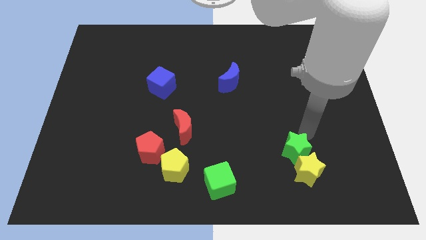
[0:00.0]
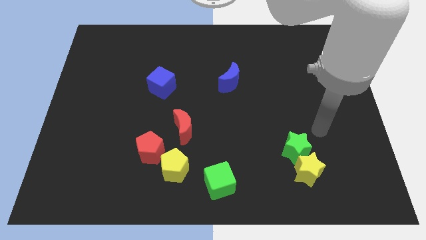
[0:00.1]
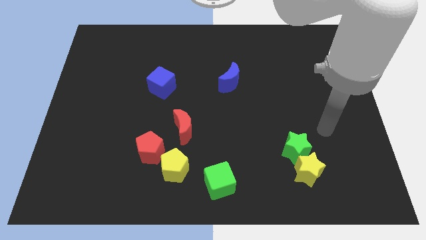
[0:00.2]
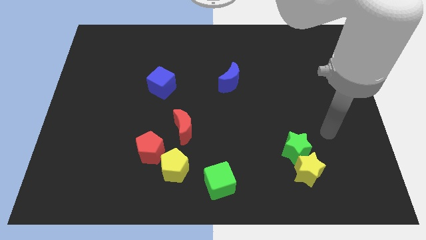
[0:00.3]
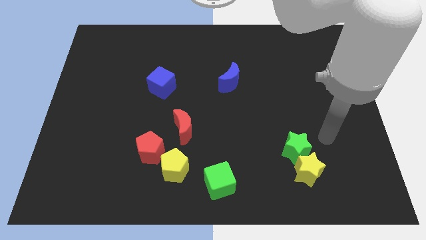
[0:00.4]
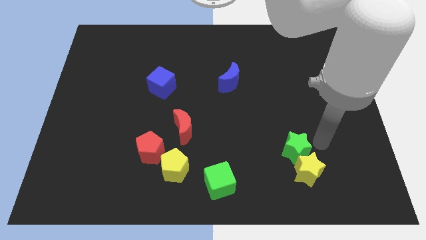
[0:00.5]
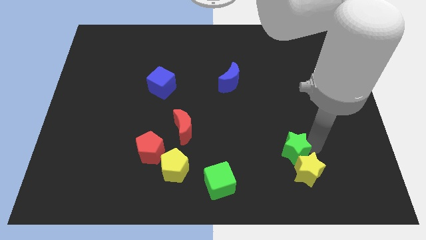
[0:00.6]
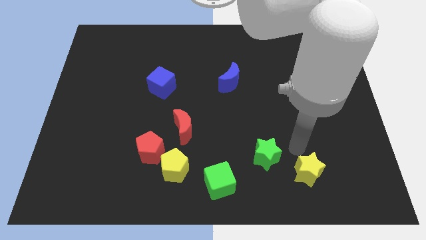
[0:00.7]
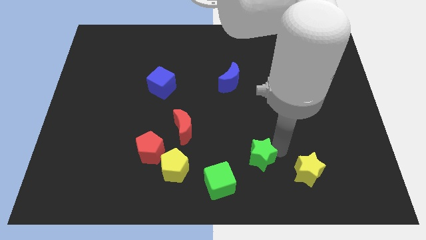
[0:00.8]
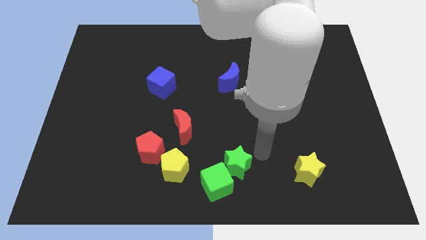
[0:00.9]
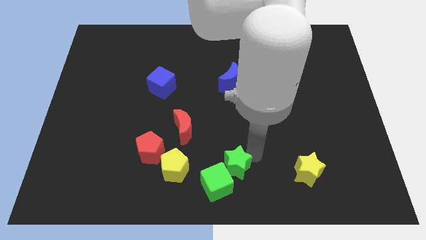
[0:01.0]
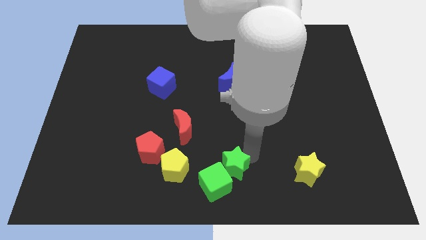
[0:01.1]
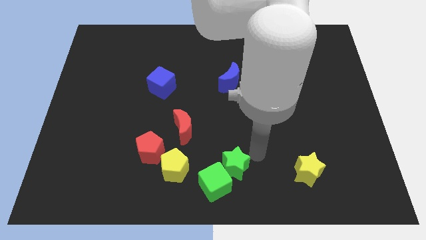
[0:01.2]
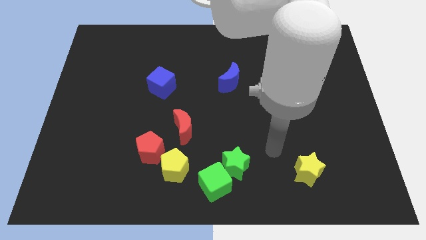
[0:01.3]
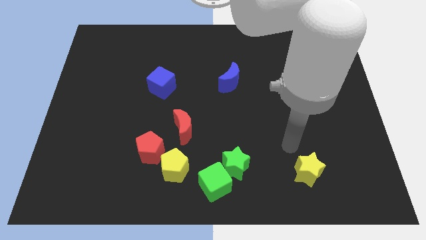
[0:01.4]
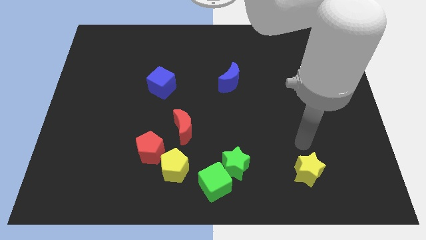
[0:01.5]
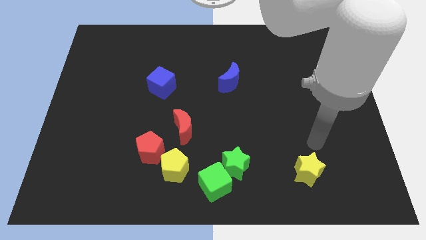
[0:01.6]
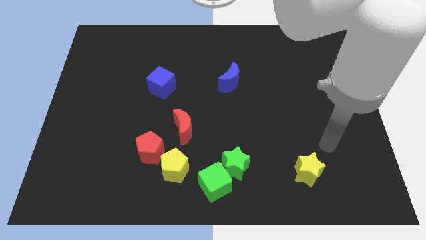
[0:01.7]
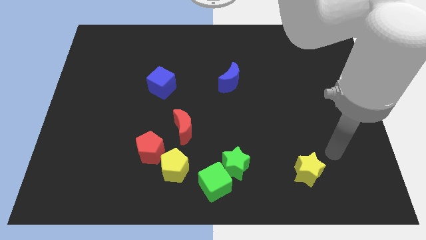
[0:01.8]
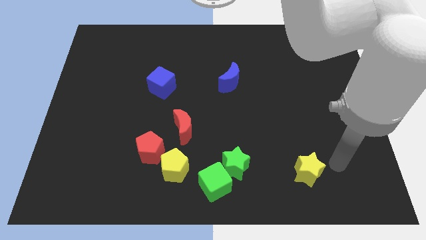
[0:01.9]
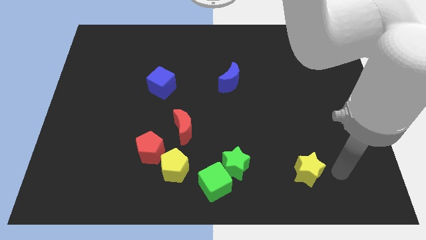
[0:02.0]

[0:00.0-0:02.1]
place the green star into green cube diagonal right on top

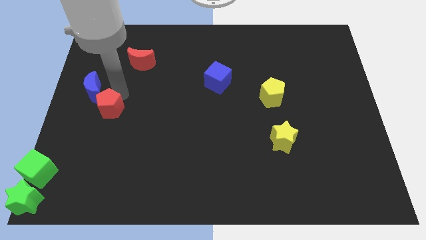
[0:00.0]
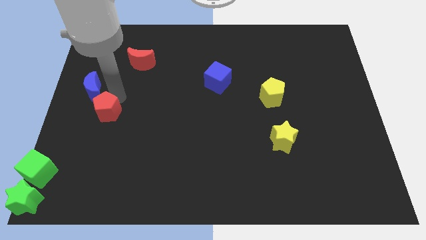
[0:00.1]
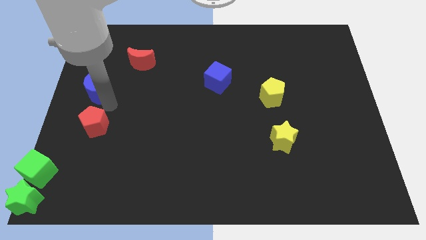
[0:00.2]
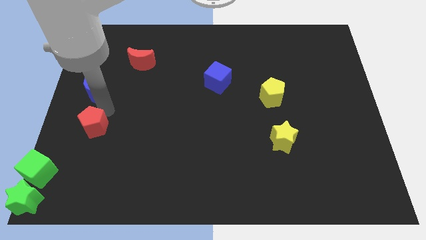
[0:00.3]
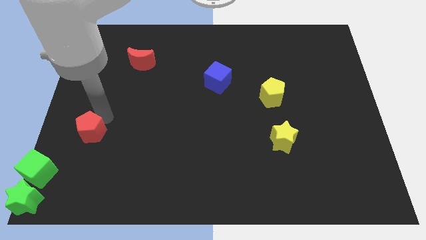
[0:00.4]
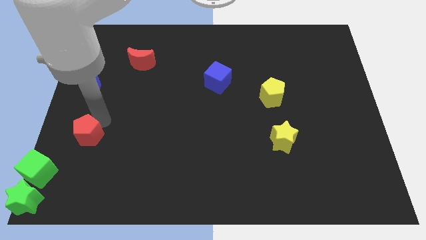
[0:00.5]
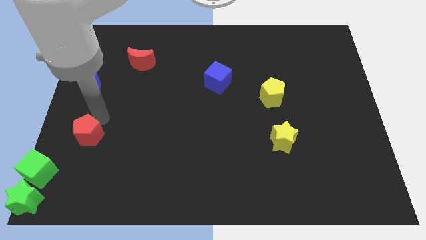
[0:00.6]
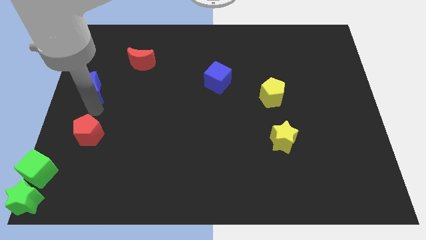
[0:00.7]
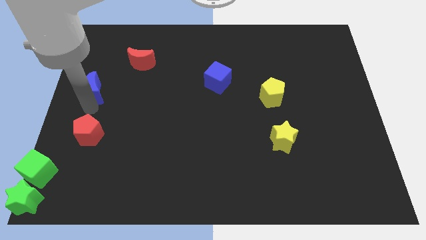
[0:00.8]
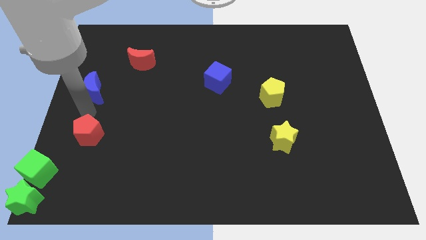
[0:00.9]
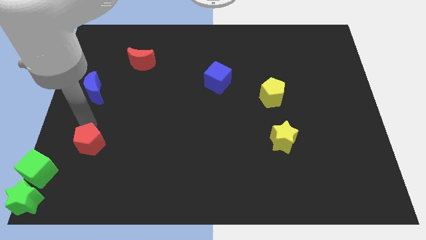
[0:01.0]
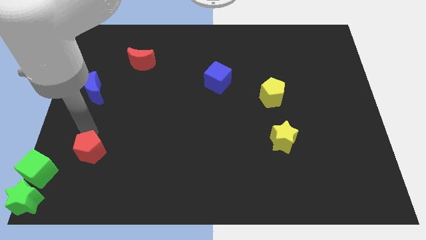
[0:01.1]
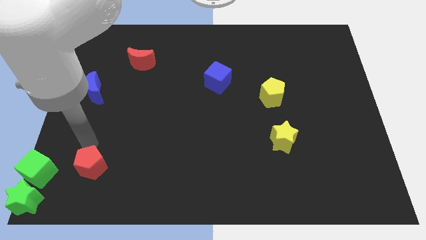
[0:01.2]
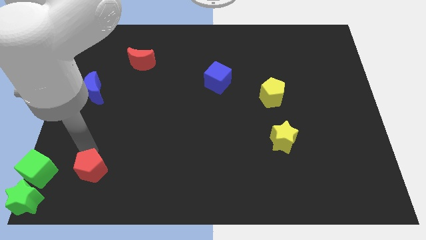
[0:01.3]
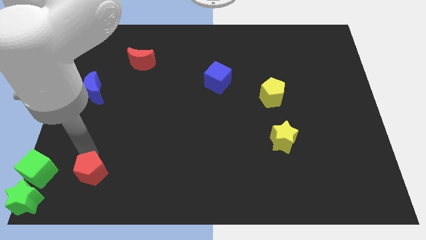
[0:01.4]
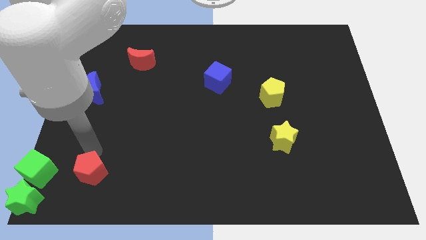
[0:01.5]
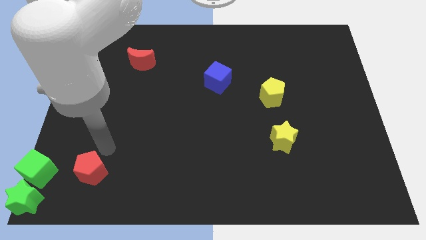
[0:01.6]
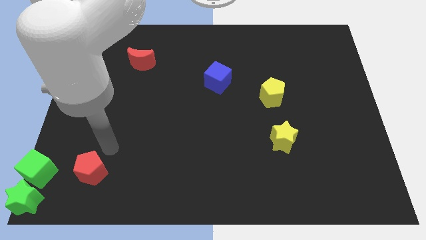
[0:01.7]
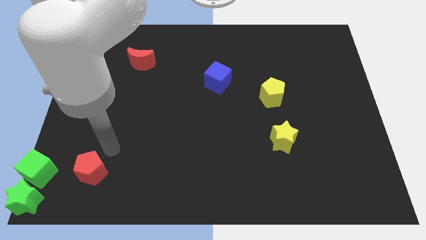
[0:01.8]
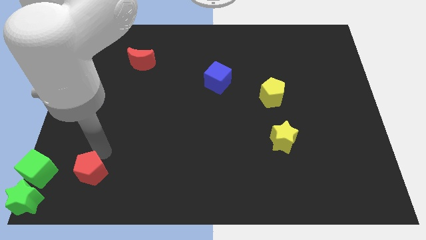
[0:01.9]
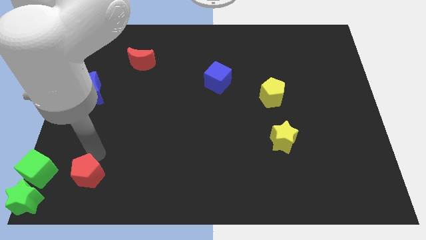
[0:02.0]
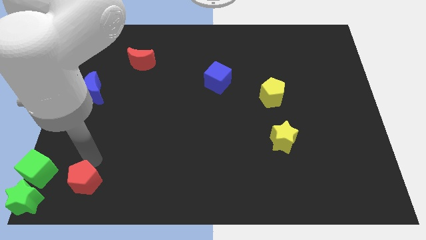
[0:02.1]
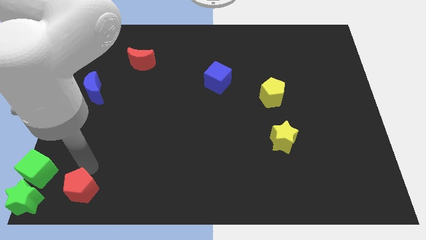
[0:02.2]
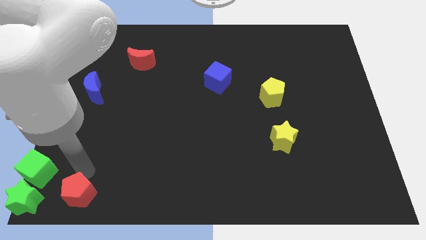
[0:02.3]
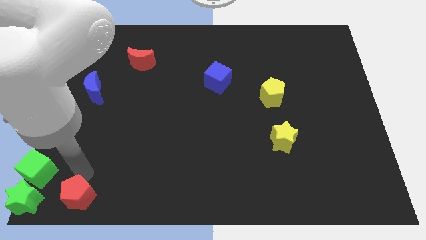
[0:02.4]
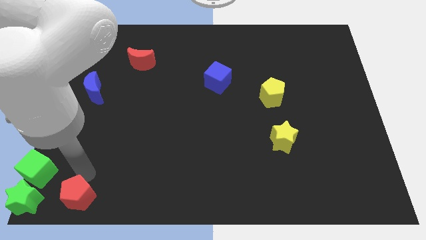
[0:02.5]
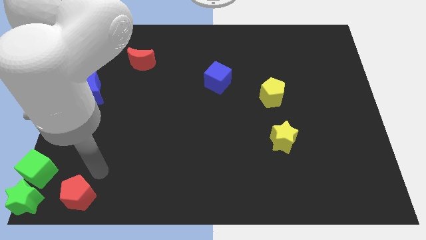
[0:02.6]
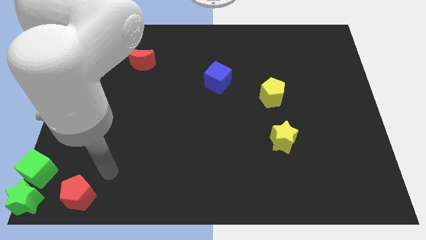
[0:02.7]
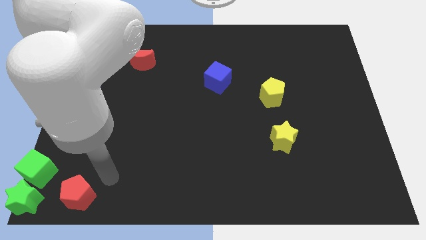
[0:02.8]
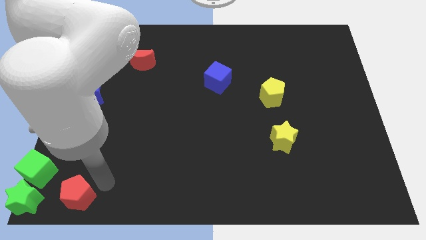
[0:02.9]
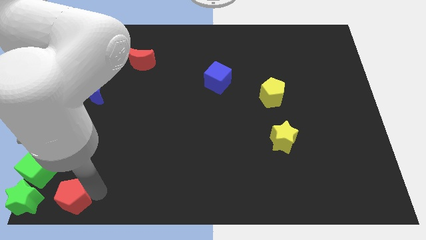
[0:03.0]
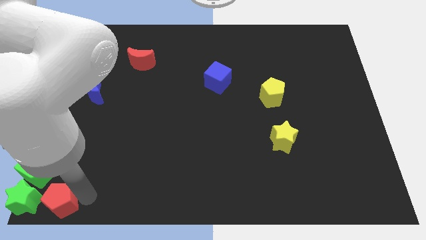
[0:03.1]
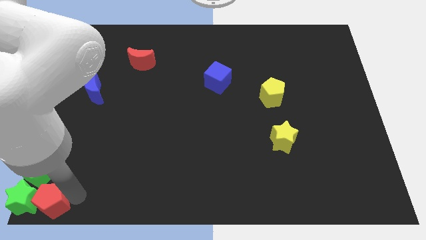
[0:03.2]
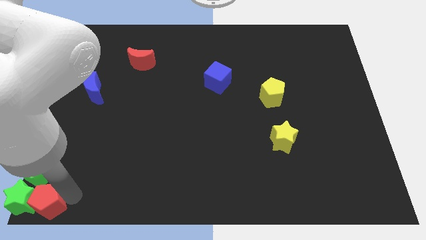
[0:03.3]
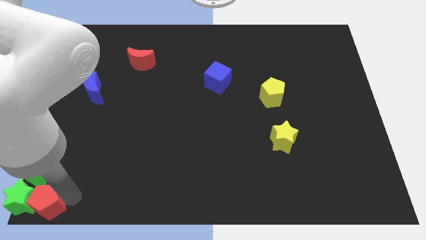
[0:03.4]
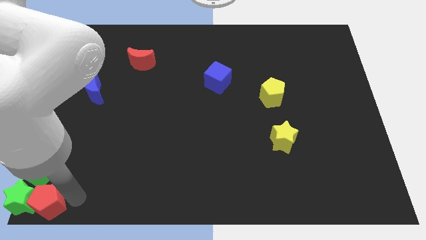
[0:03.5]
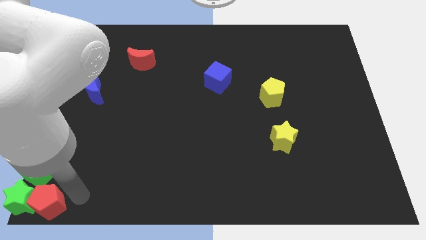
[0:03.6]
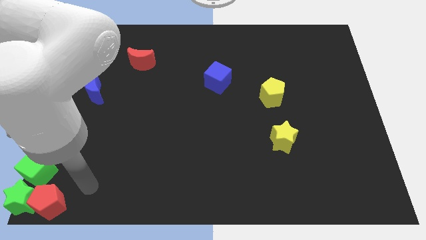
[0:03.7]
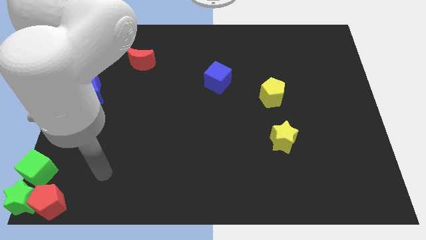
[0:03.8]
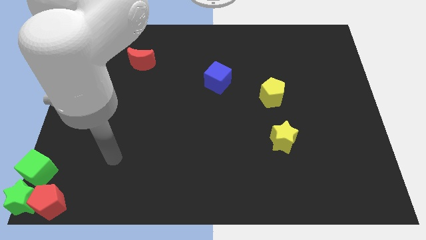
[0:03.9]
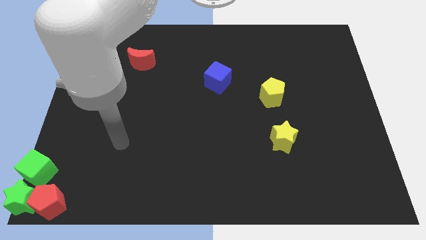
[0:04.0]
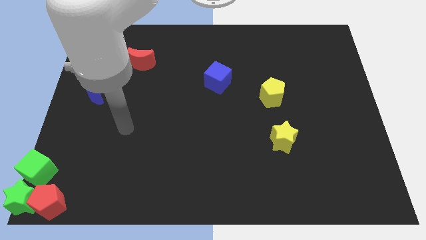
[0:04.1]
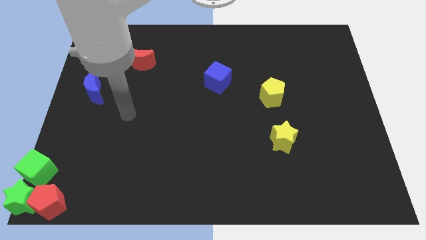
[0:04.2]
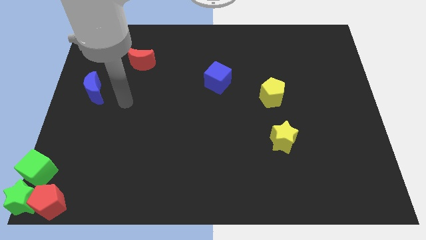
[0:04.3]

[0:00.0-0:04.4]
push the red pentagon into the green star

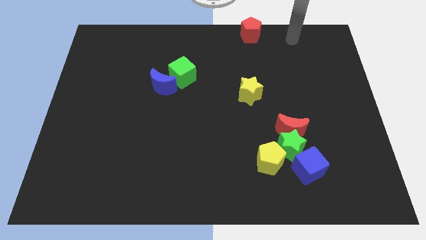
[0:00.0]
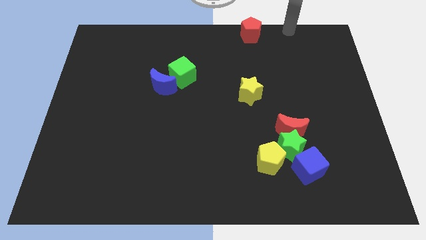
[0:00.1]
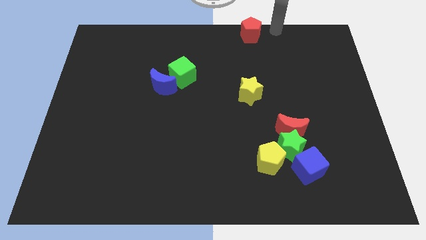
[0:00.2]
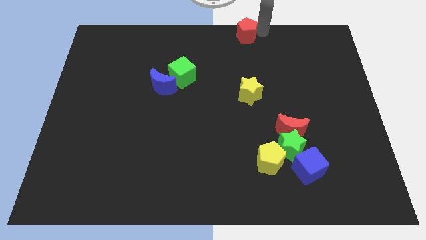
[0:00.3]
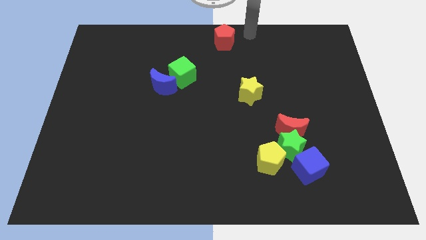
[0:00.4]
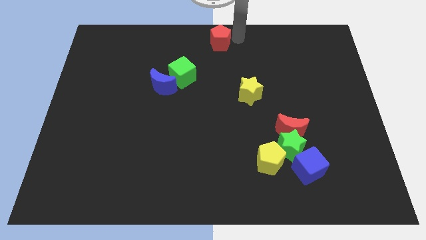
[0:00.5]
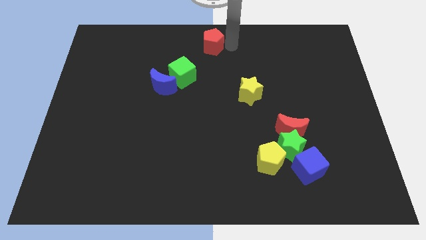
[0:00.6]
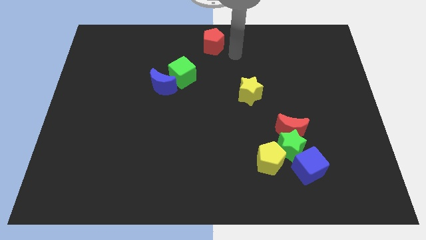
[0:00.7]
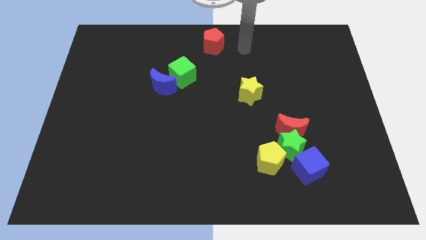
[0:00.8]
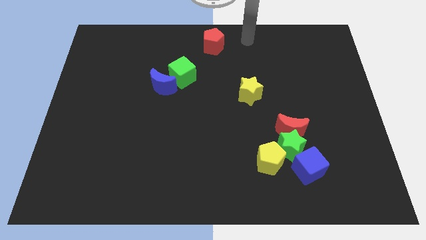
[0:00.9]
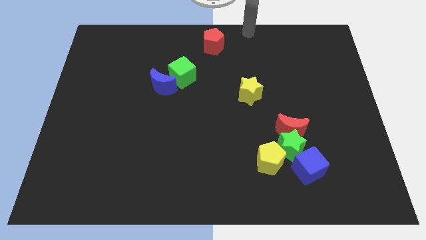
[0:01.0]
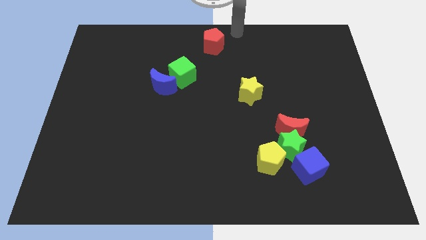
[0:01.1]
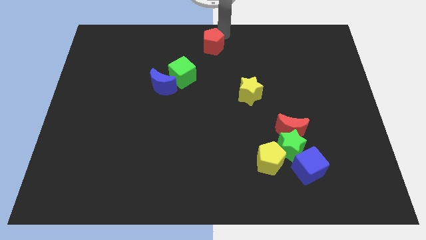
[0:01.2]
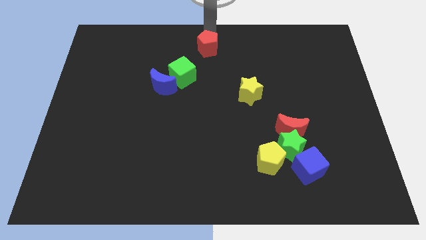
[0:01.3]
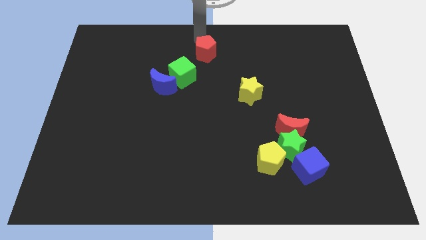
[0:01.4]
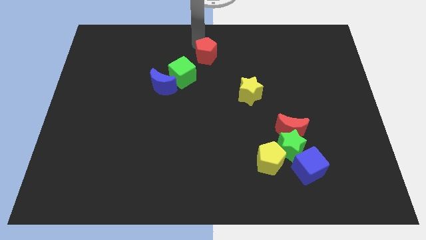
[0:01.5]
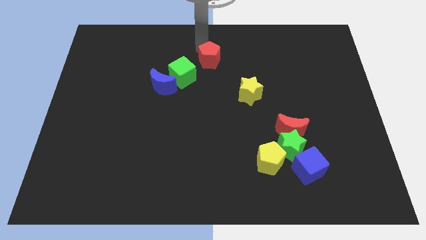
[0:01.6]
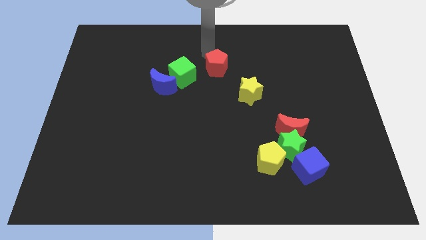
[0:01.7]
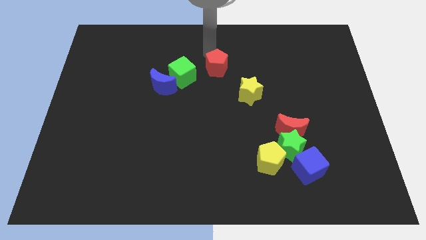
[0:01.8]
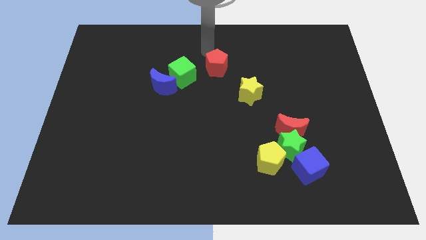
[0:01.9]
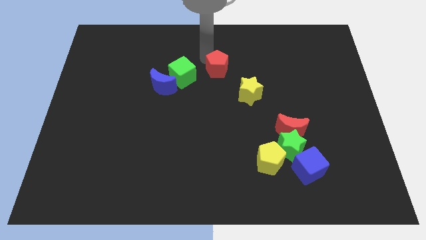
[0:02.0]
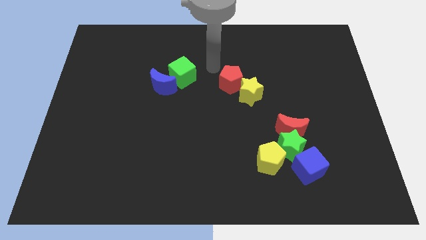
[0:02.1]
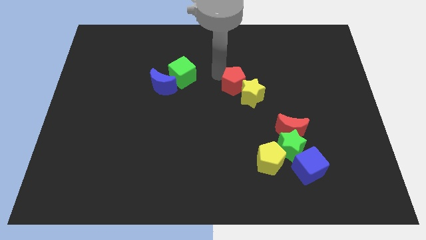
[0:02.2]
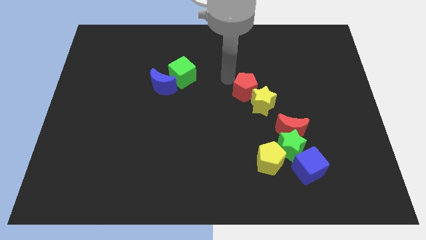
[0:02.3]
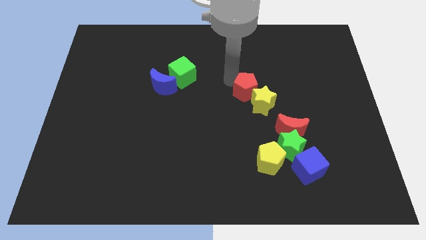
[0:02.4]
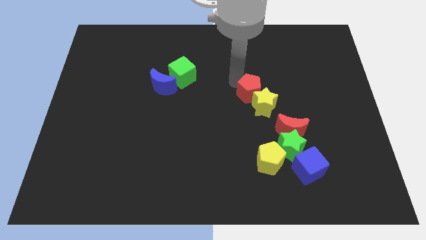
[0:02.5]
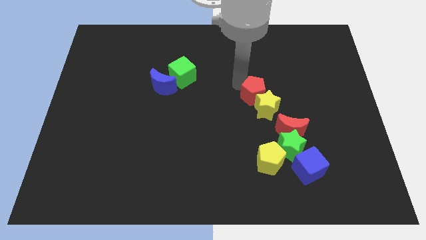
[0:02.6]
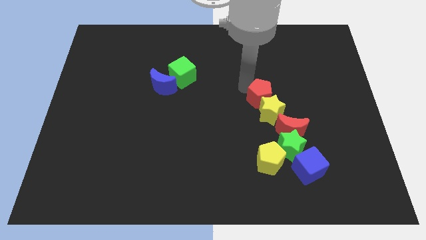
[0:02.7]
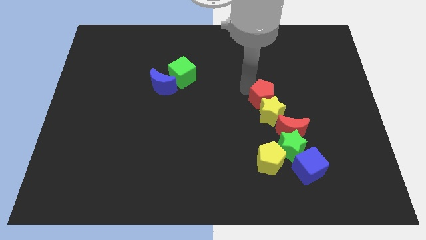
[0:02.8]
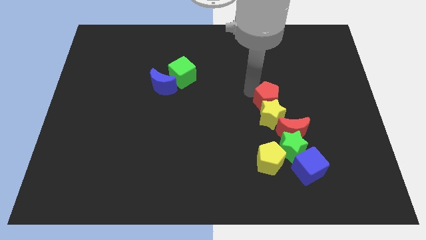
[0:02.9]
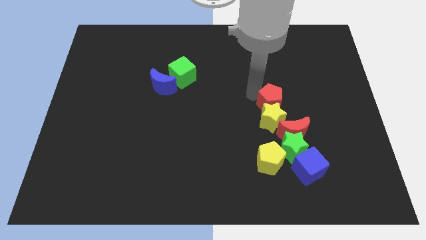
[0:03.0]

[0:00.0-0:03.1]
add red pentagon into yellow star
